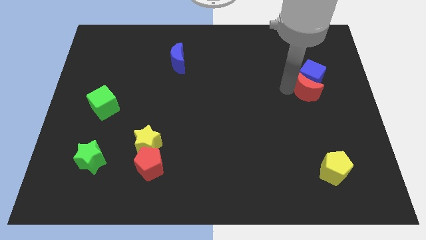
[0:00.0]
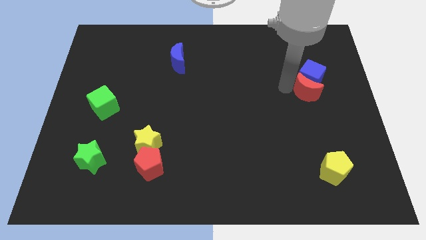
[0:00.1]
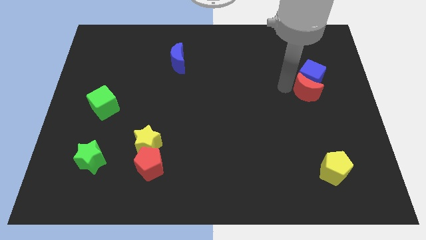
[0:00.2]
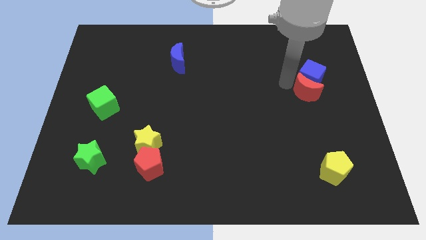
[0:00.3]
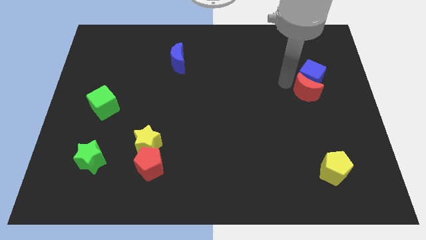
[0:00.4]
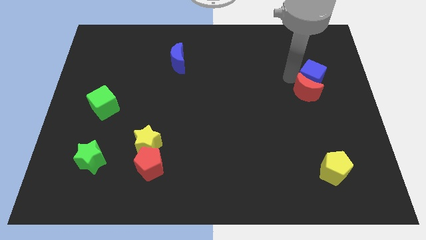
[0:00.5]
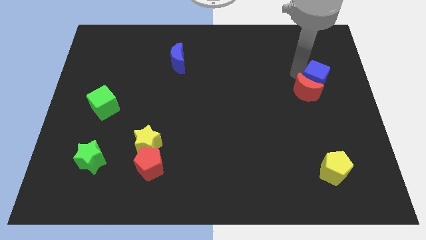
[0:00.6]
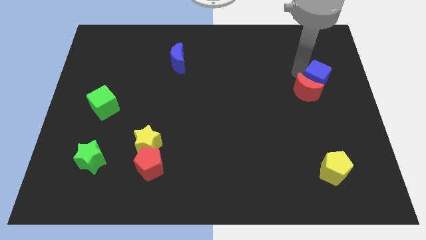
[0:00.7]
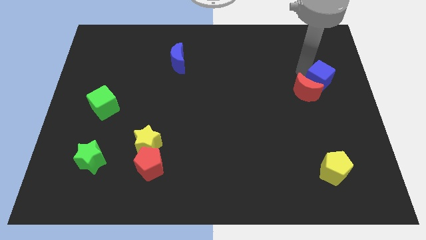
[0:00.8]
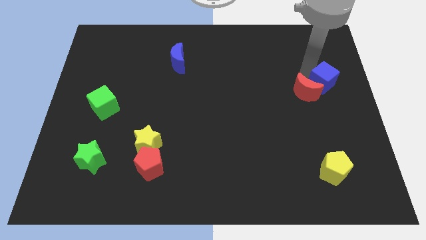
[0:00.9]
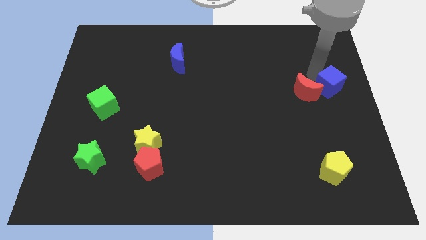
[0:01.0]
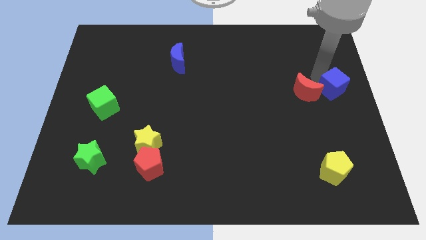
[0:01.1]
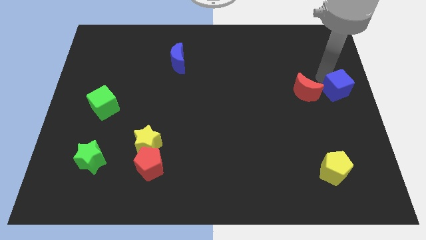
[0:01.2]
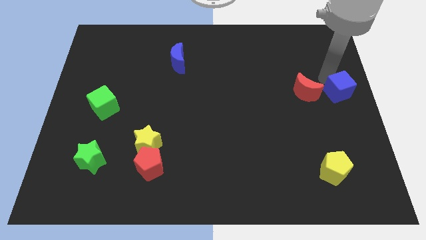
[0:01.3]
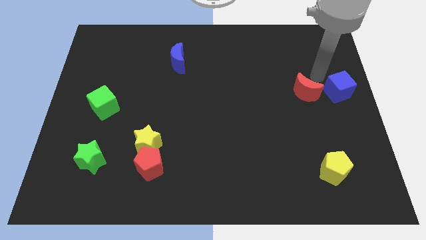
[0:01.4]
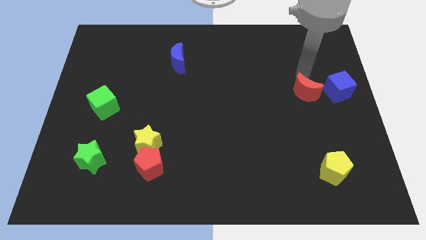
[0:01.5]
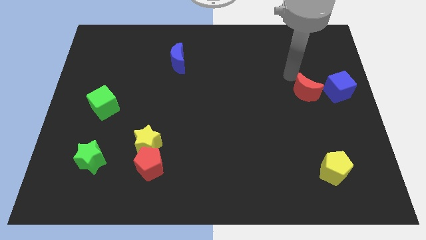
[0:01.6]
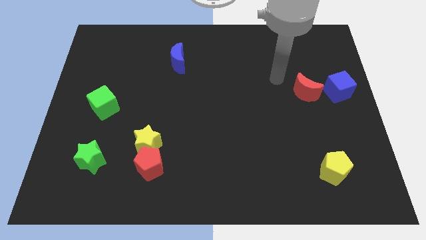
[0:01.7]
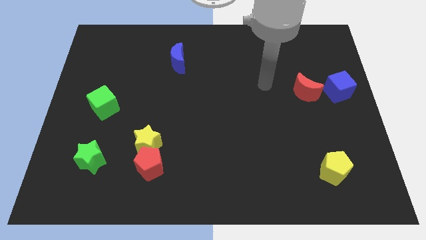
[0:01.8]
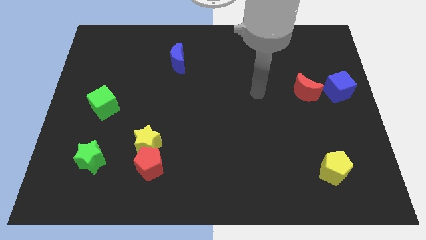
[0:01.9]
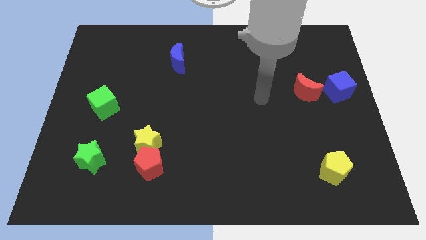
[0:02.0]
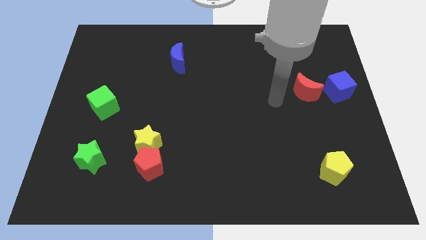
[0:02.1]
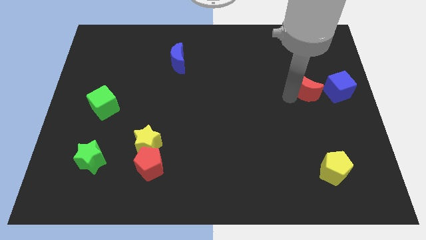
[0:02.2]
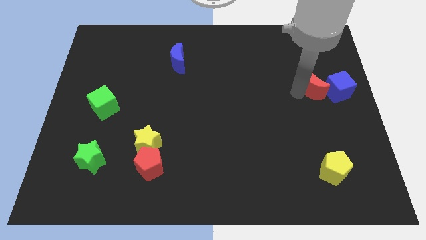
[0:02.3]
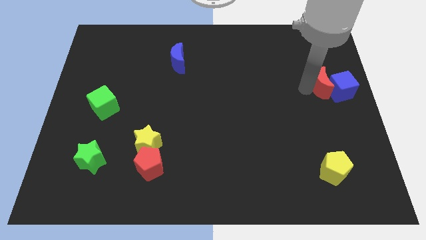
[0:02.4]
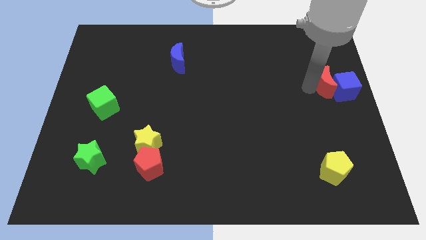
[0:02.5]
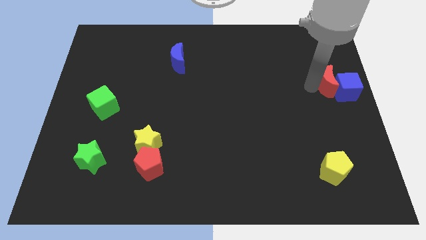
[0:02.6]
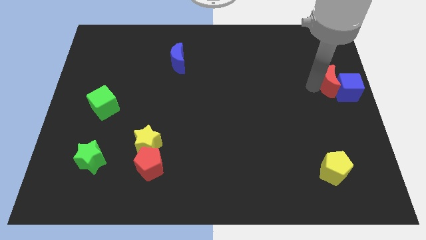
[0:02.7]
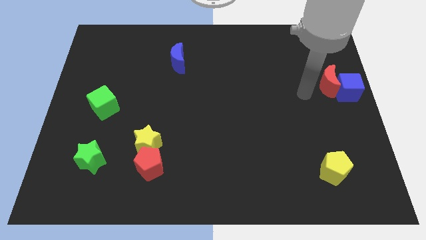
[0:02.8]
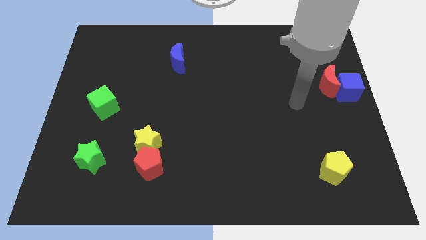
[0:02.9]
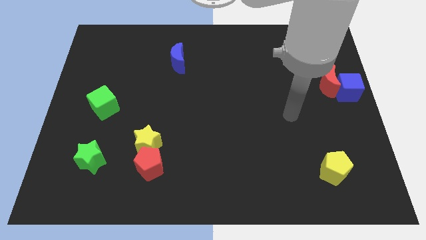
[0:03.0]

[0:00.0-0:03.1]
adjust blue cube and red moon to the center right

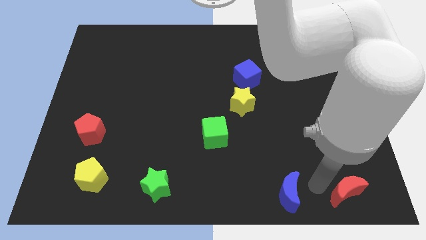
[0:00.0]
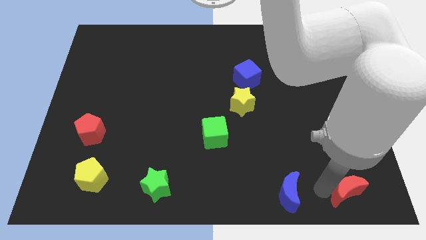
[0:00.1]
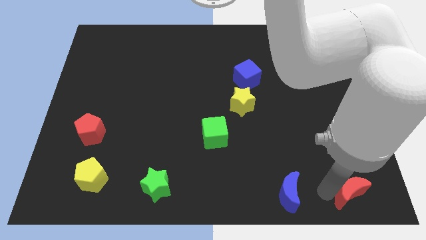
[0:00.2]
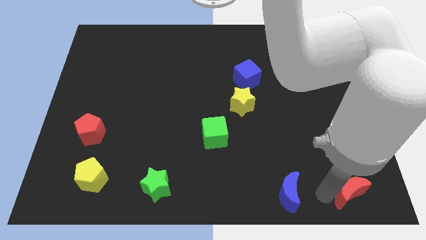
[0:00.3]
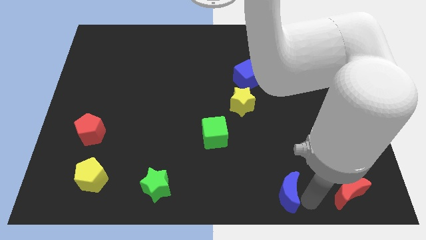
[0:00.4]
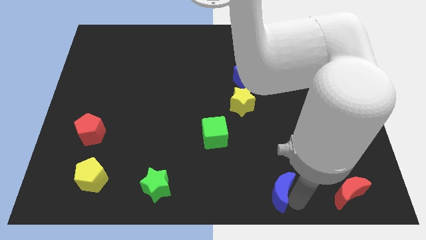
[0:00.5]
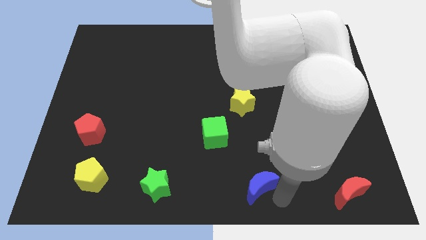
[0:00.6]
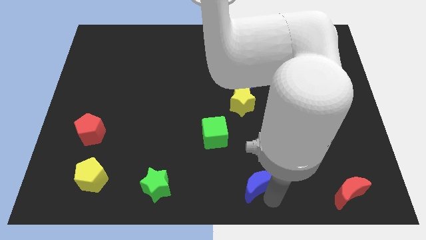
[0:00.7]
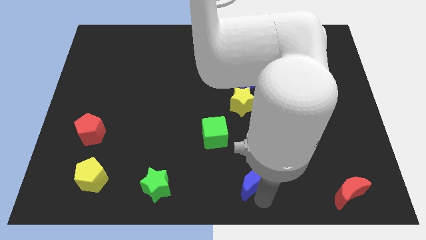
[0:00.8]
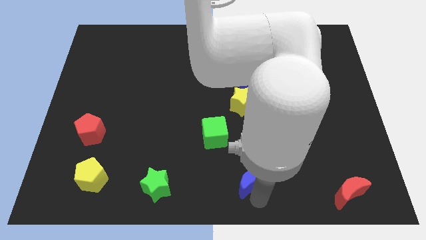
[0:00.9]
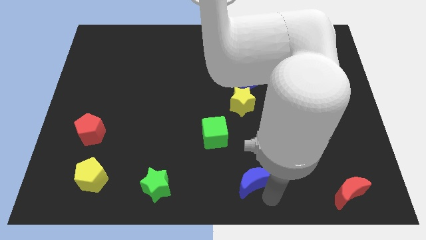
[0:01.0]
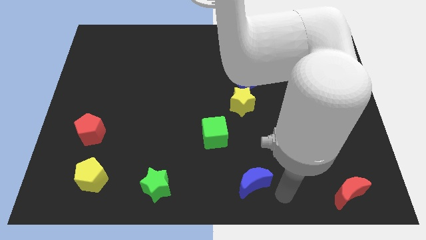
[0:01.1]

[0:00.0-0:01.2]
slightly push the blue moon near to the green cube

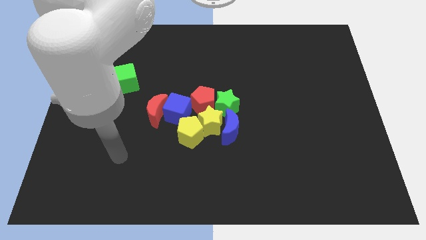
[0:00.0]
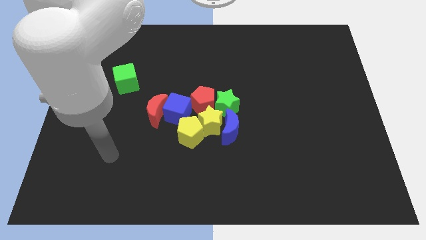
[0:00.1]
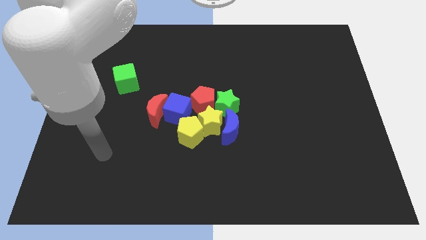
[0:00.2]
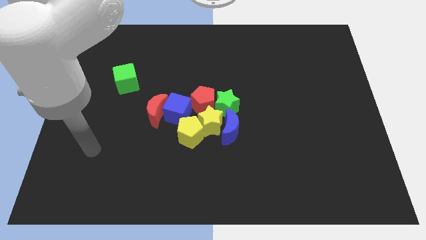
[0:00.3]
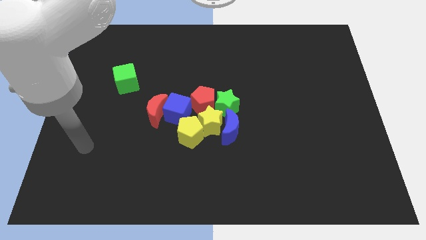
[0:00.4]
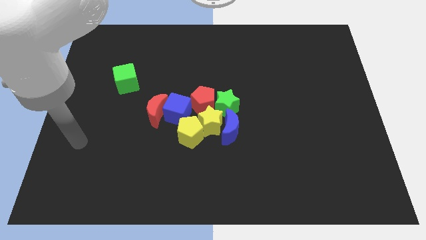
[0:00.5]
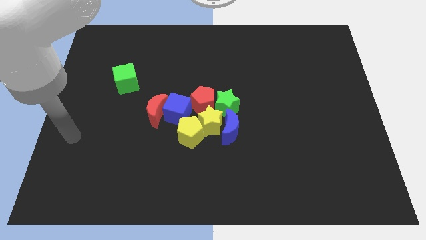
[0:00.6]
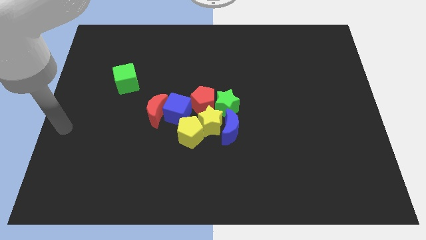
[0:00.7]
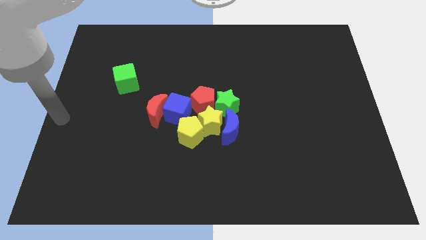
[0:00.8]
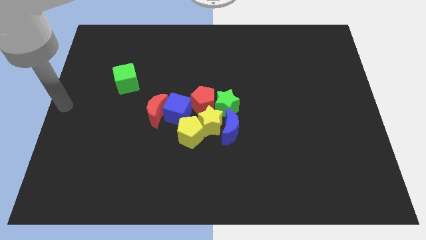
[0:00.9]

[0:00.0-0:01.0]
move your hand to the center left

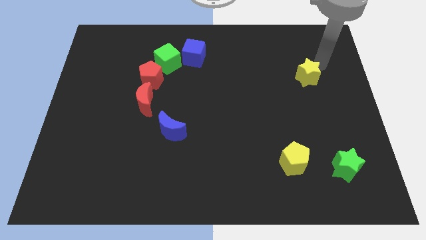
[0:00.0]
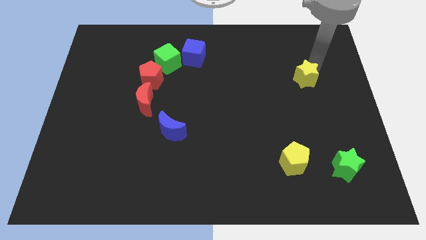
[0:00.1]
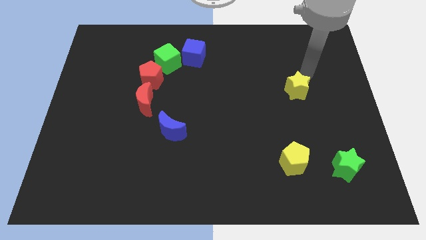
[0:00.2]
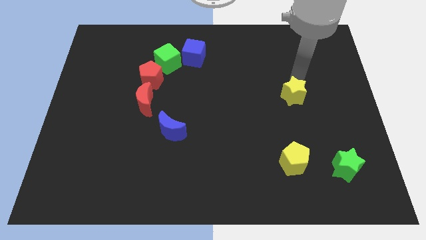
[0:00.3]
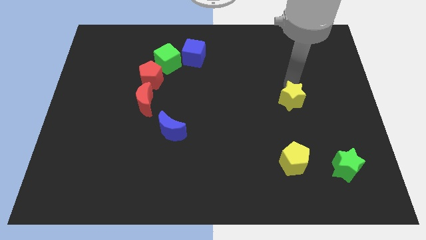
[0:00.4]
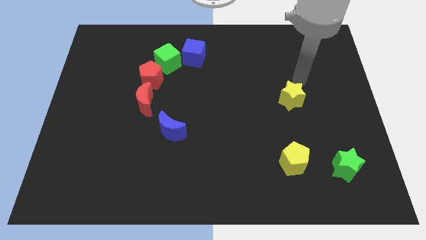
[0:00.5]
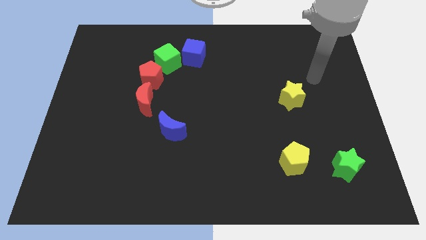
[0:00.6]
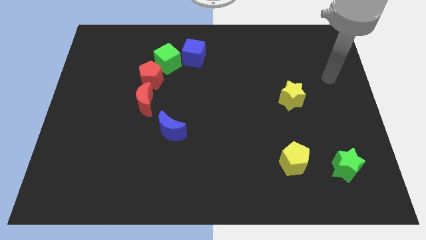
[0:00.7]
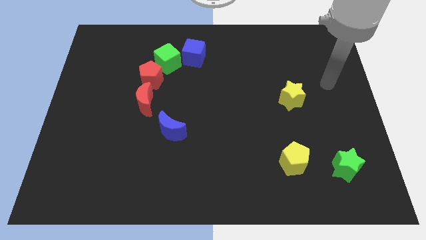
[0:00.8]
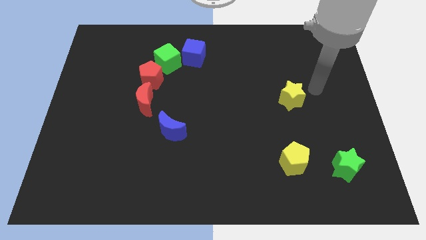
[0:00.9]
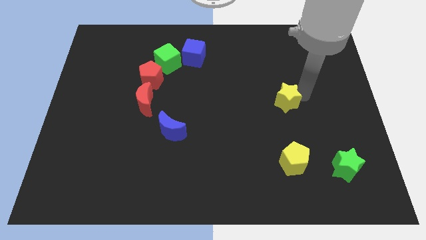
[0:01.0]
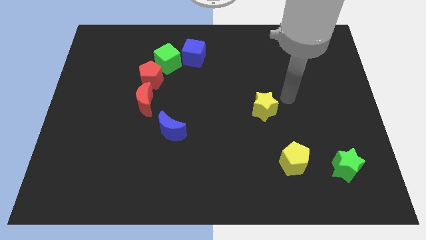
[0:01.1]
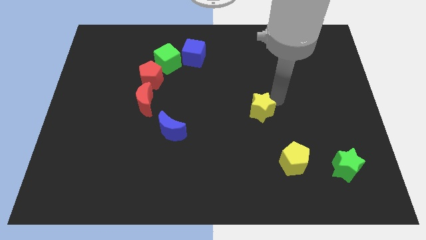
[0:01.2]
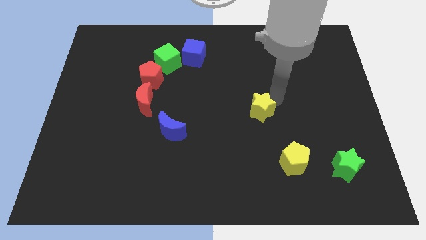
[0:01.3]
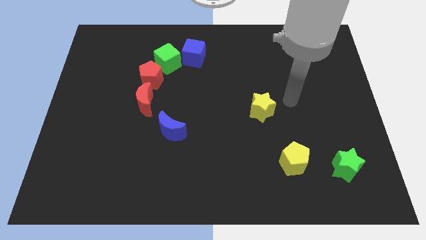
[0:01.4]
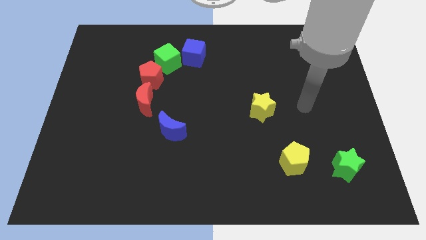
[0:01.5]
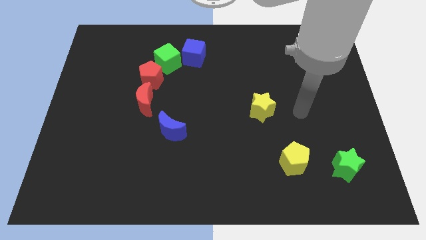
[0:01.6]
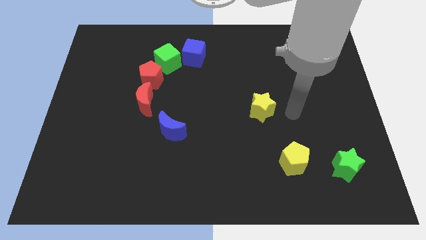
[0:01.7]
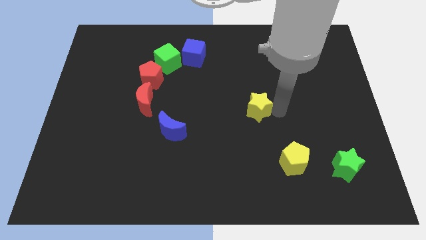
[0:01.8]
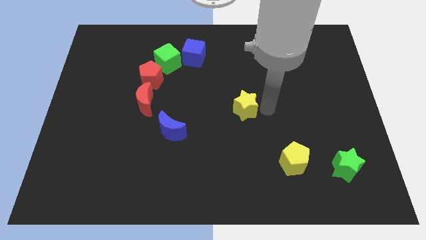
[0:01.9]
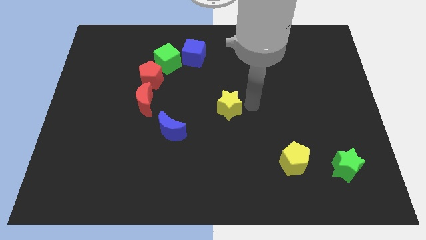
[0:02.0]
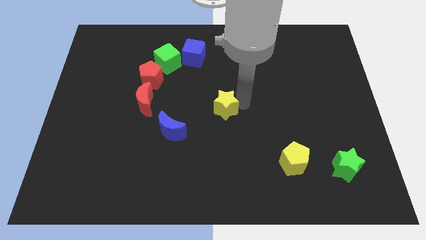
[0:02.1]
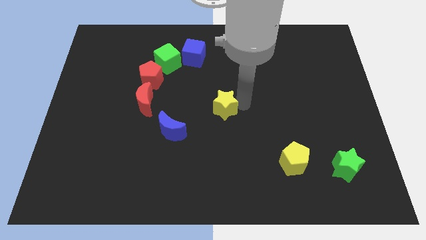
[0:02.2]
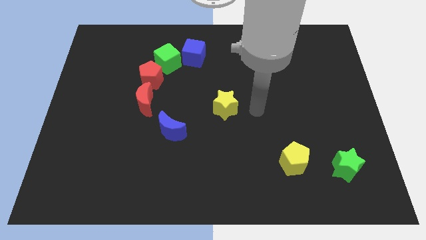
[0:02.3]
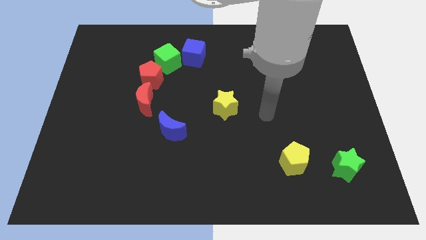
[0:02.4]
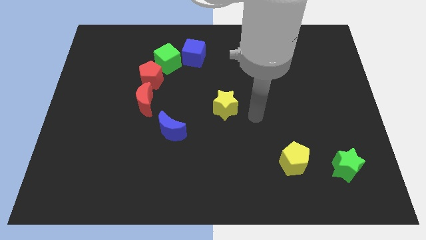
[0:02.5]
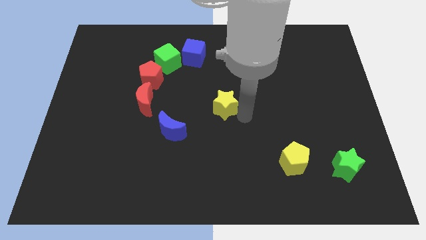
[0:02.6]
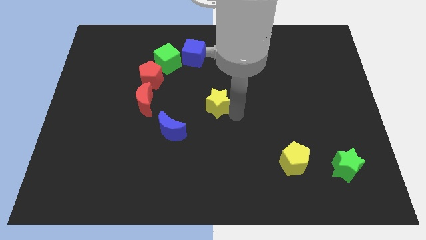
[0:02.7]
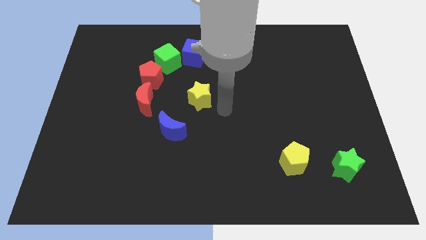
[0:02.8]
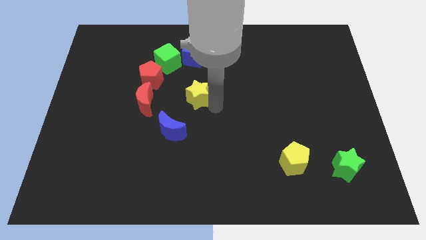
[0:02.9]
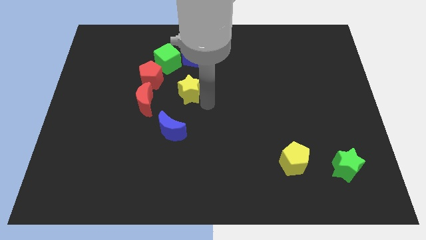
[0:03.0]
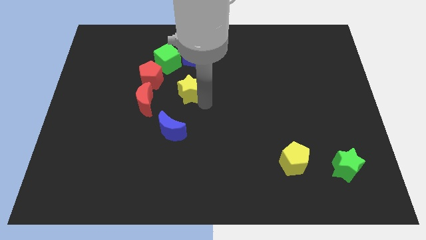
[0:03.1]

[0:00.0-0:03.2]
push yellow star below blue cube

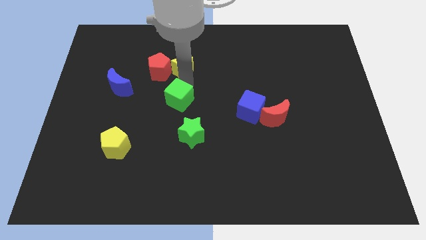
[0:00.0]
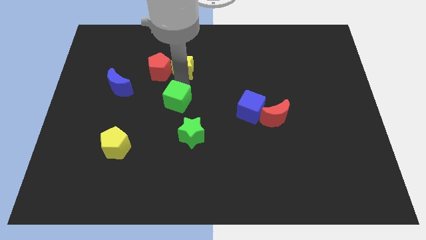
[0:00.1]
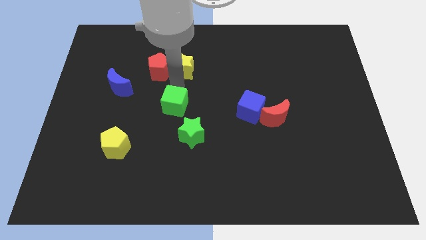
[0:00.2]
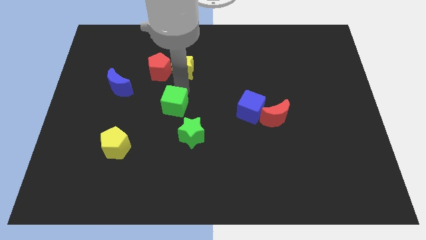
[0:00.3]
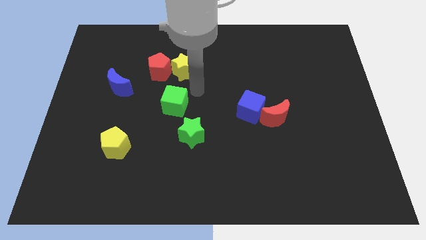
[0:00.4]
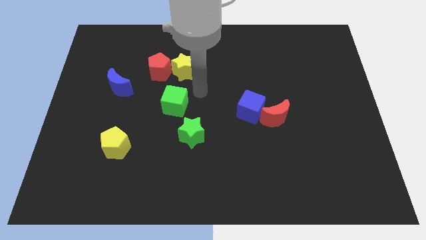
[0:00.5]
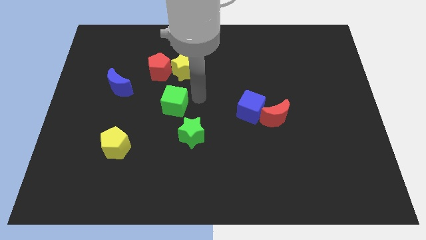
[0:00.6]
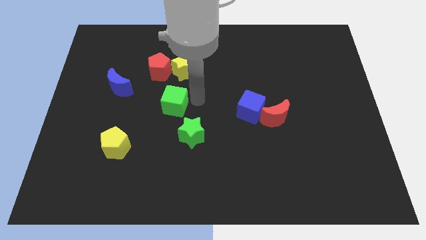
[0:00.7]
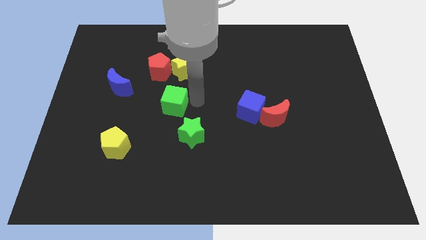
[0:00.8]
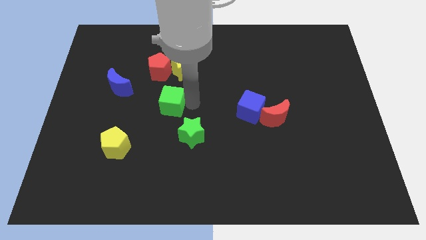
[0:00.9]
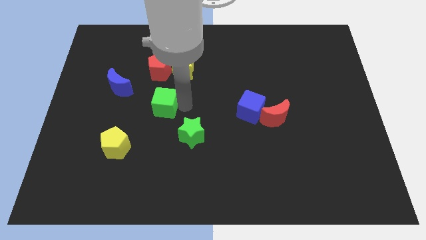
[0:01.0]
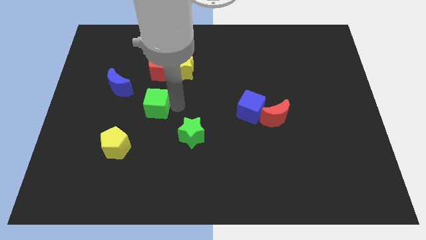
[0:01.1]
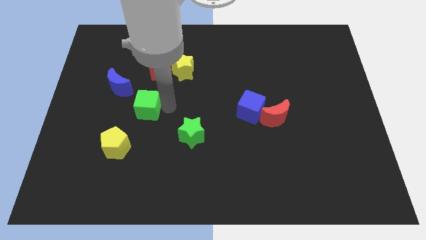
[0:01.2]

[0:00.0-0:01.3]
put the green cube between the blue moon and green star
